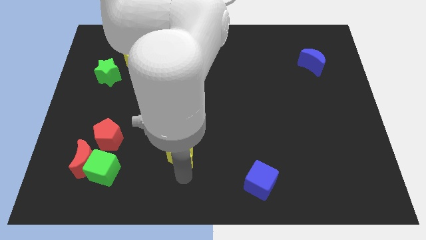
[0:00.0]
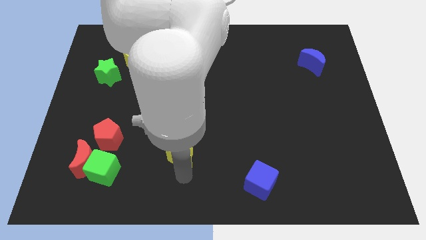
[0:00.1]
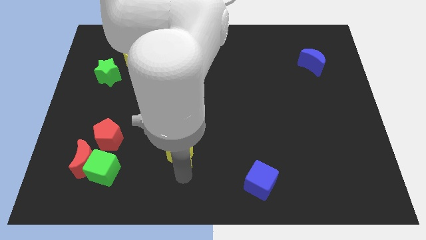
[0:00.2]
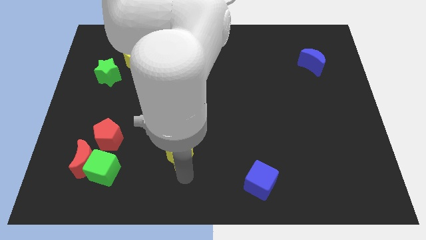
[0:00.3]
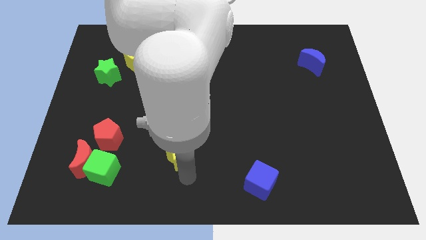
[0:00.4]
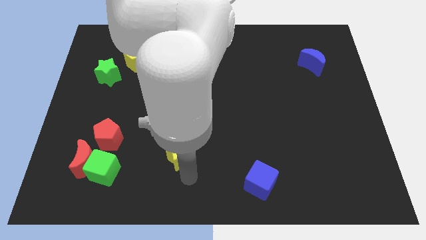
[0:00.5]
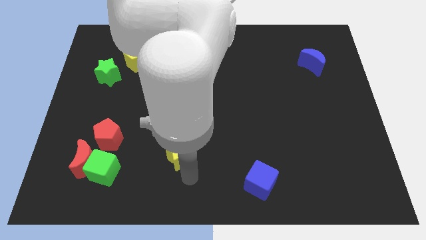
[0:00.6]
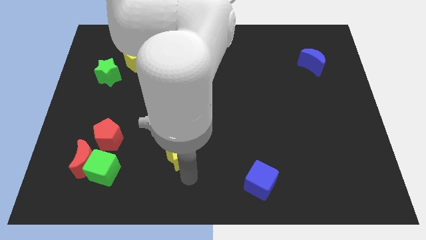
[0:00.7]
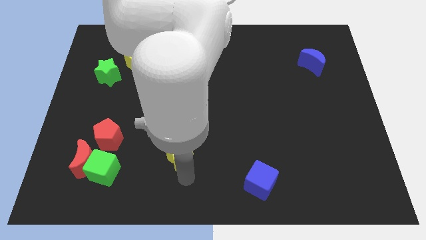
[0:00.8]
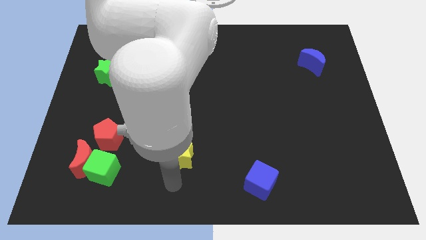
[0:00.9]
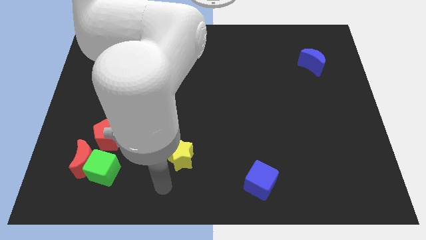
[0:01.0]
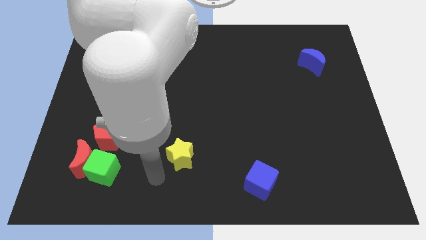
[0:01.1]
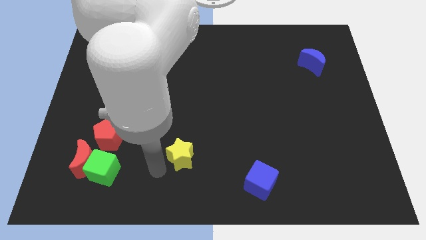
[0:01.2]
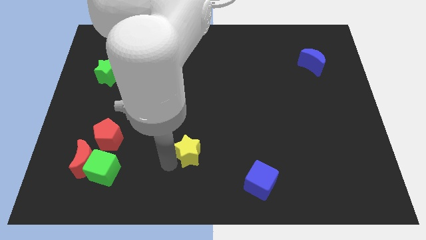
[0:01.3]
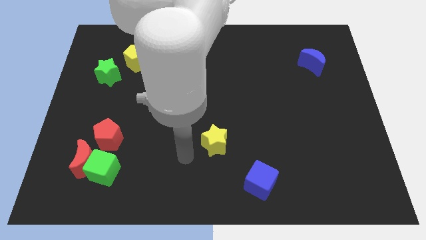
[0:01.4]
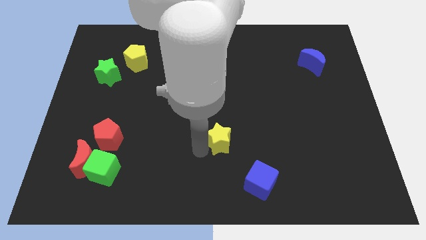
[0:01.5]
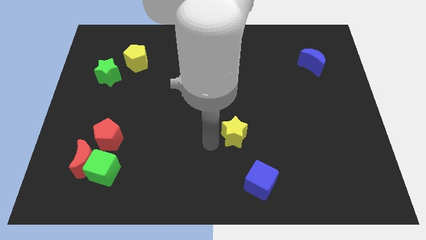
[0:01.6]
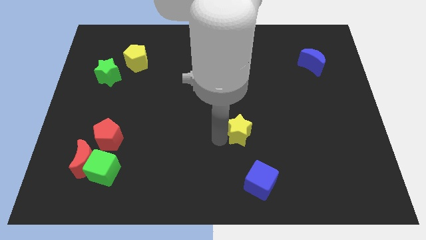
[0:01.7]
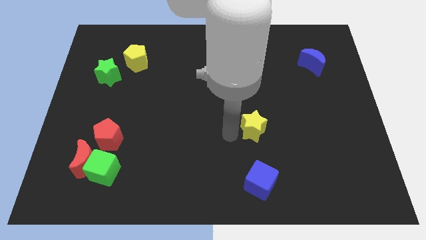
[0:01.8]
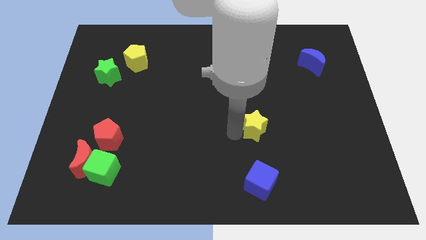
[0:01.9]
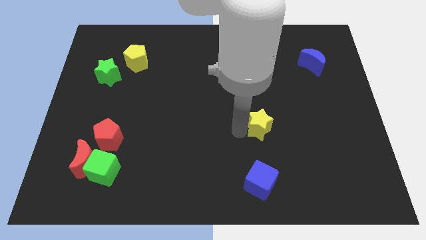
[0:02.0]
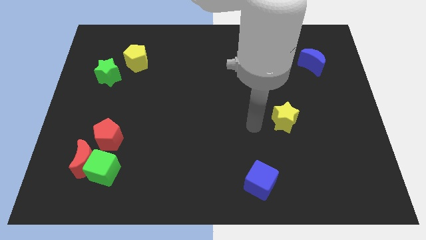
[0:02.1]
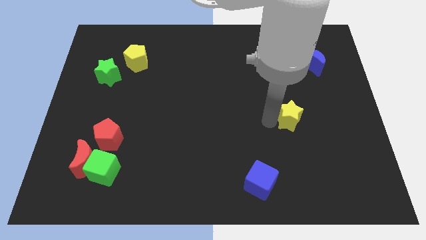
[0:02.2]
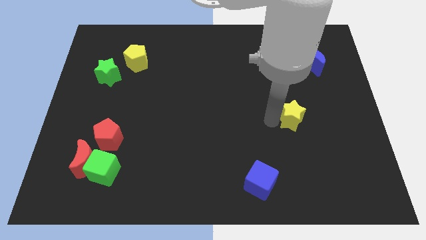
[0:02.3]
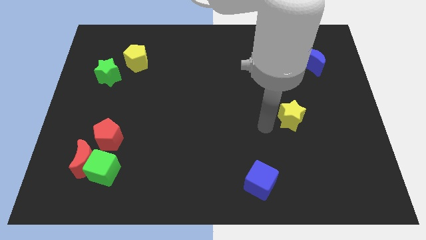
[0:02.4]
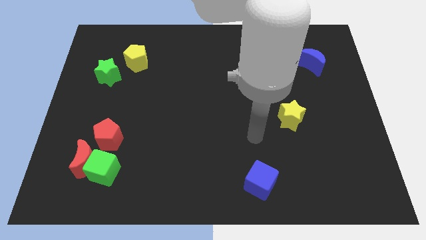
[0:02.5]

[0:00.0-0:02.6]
place the yellow star in between the blue crescent and blue cube

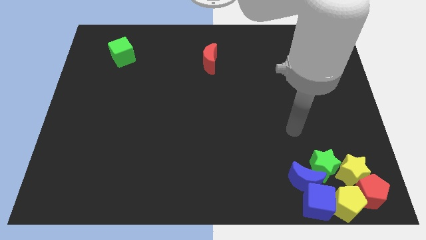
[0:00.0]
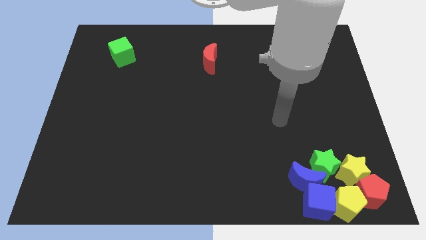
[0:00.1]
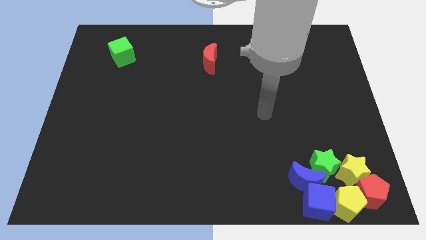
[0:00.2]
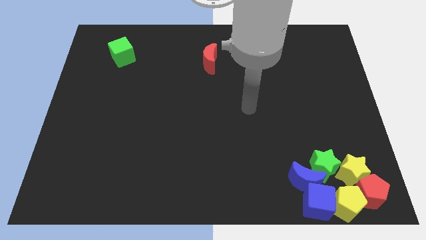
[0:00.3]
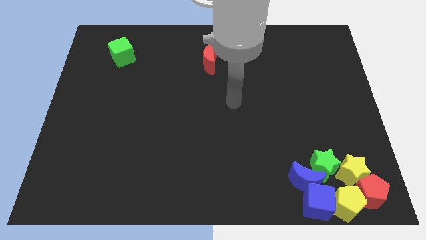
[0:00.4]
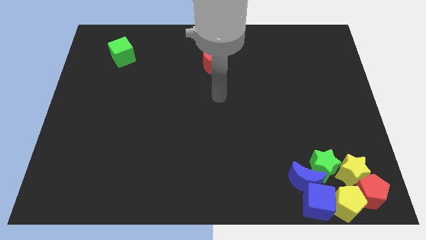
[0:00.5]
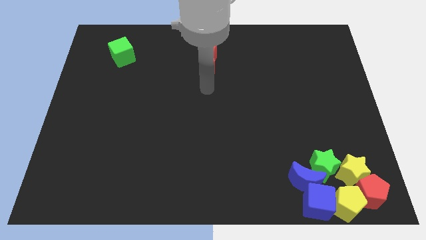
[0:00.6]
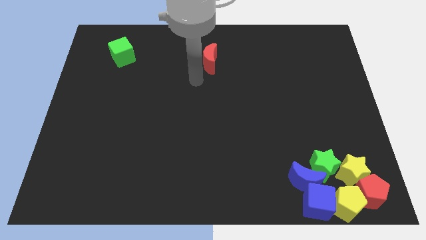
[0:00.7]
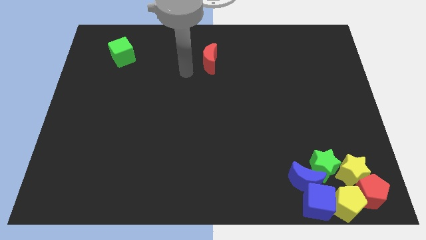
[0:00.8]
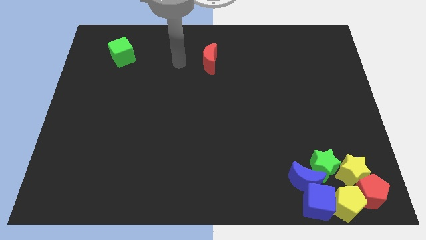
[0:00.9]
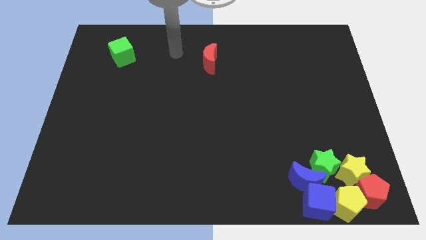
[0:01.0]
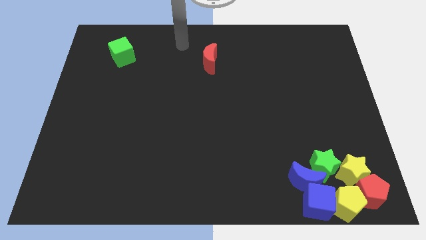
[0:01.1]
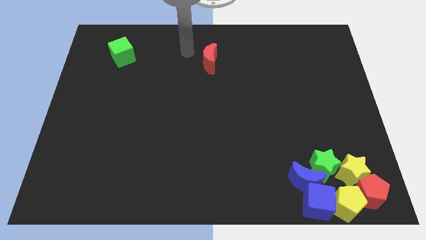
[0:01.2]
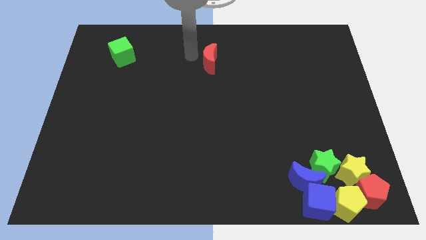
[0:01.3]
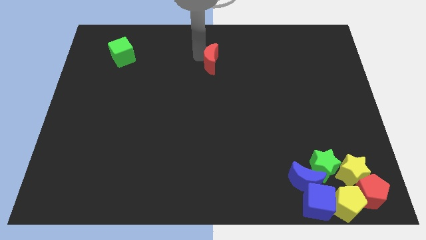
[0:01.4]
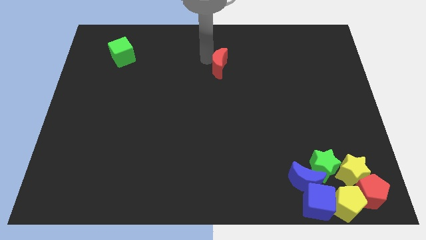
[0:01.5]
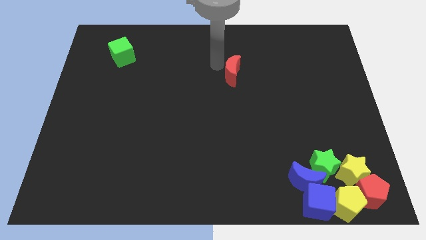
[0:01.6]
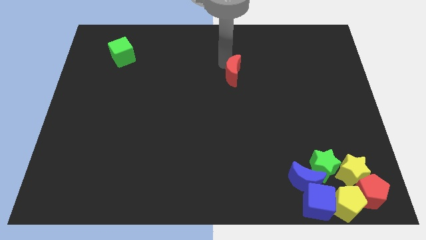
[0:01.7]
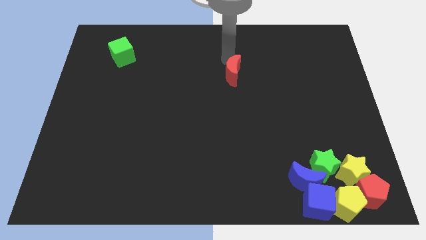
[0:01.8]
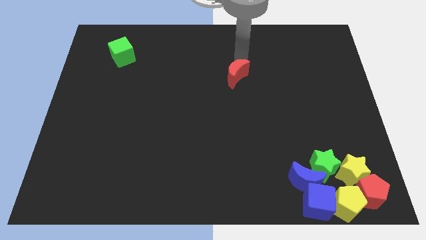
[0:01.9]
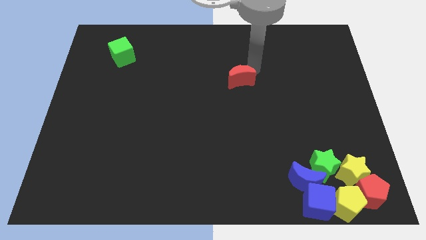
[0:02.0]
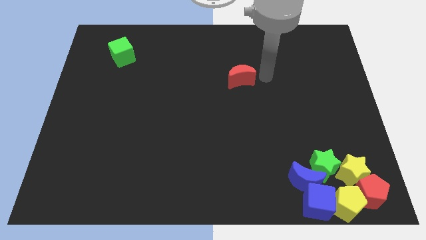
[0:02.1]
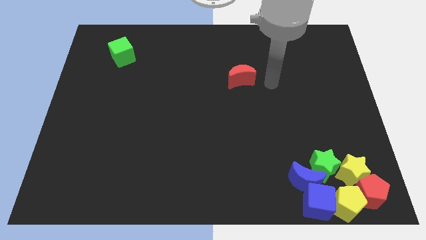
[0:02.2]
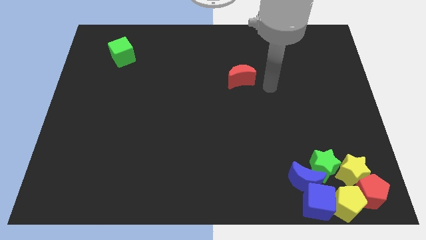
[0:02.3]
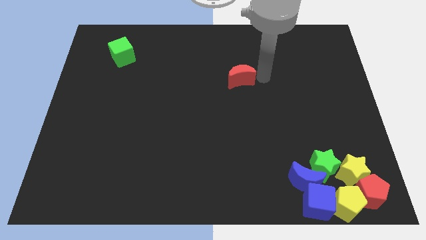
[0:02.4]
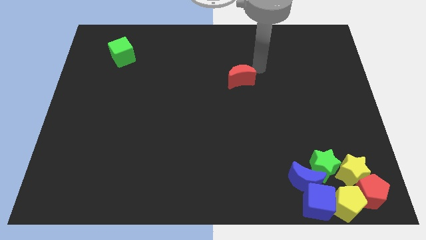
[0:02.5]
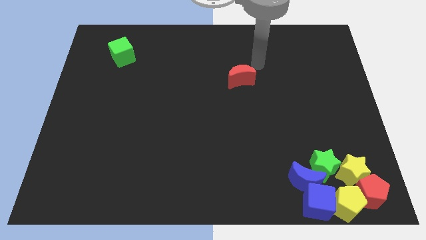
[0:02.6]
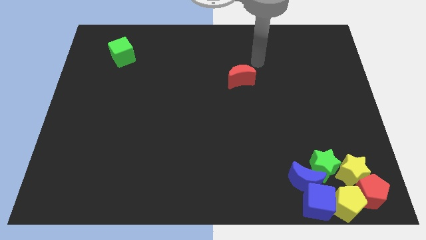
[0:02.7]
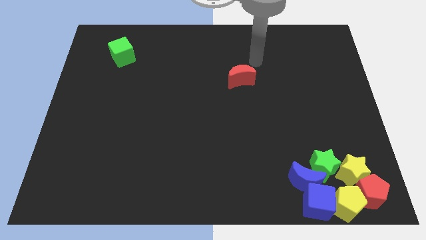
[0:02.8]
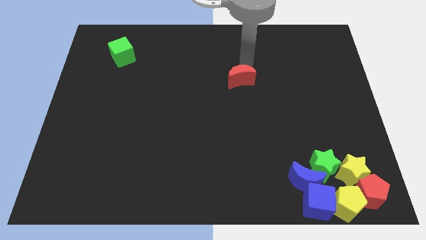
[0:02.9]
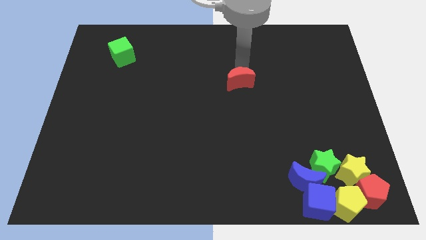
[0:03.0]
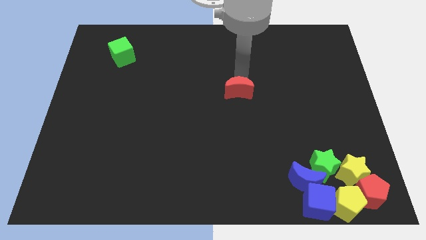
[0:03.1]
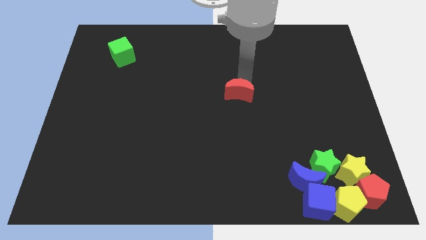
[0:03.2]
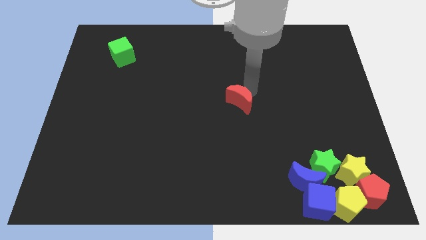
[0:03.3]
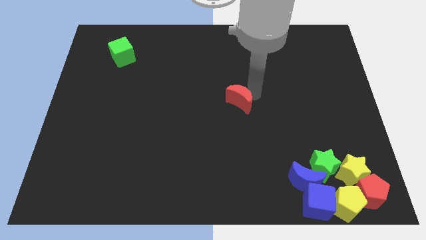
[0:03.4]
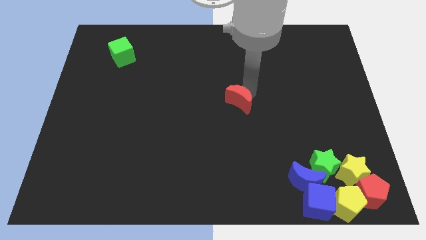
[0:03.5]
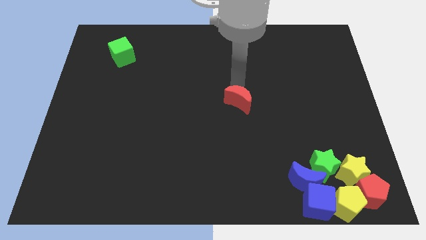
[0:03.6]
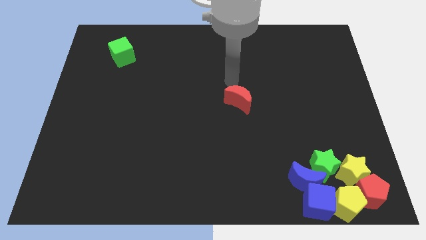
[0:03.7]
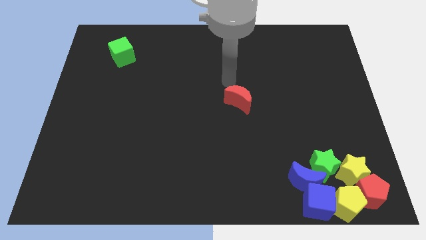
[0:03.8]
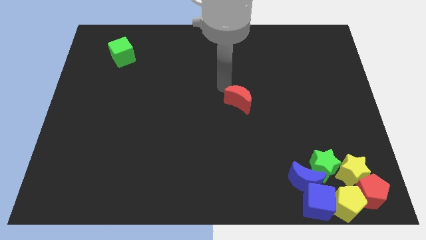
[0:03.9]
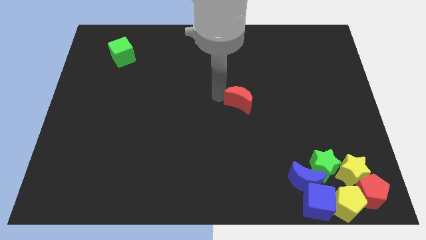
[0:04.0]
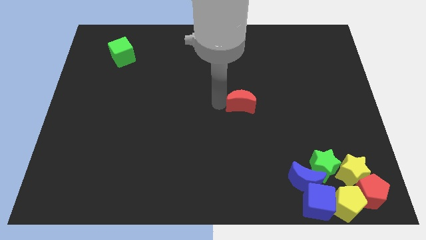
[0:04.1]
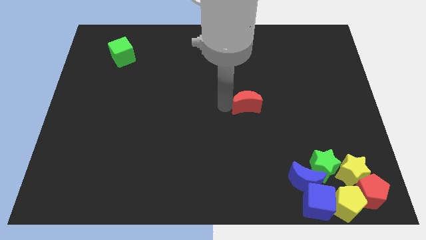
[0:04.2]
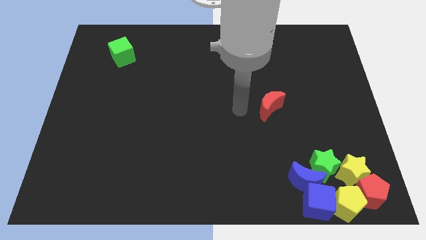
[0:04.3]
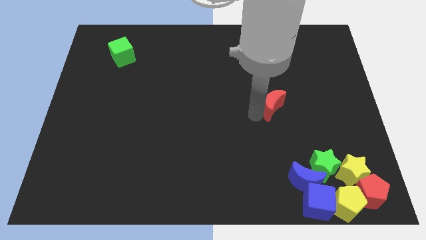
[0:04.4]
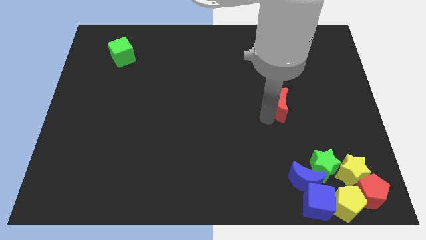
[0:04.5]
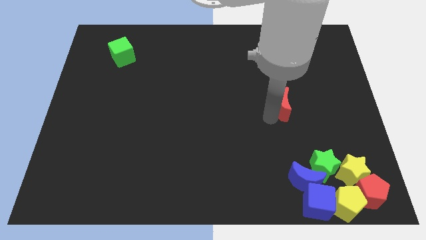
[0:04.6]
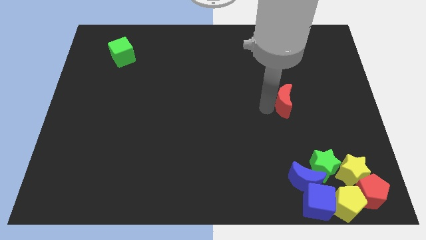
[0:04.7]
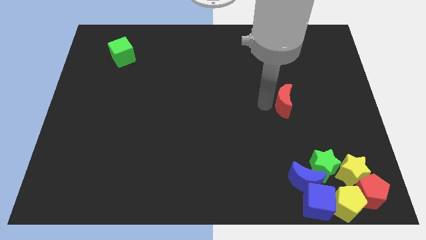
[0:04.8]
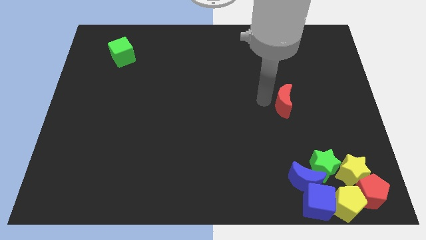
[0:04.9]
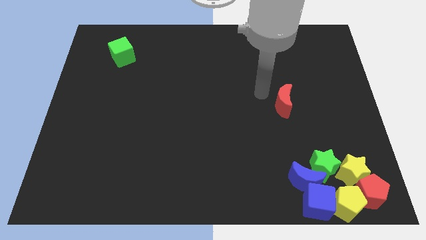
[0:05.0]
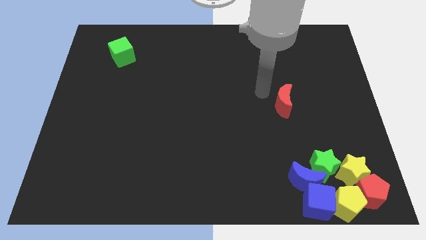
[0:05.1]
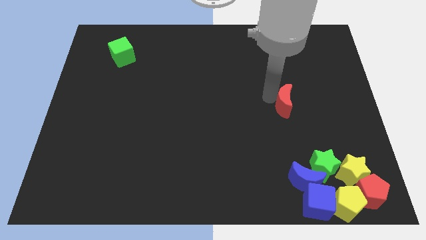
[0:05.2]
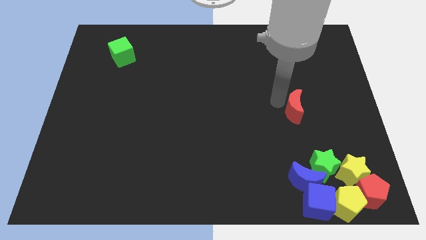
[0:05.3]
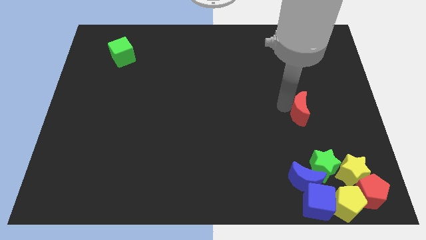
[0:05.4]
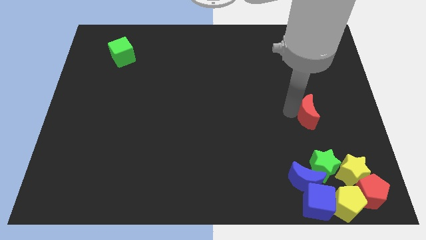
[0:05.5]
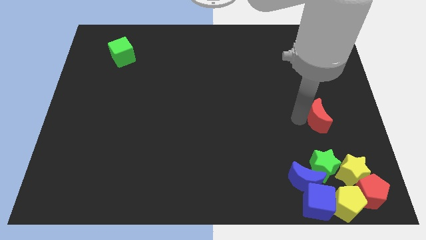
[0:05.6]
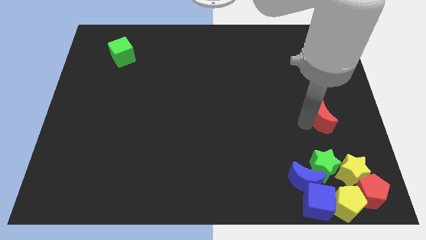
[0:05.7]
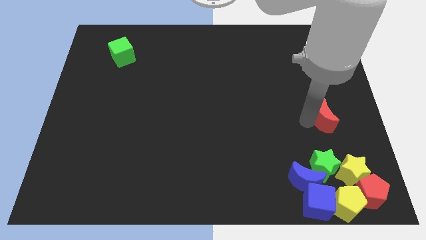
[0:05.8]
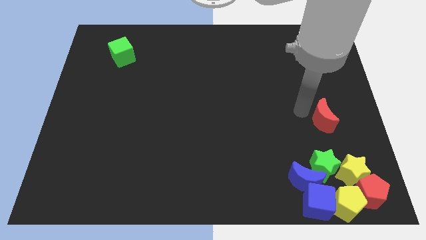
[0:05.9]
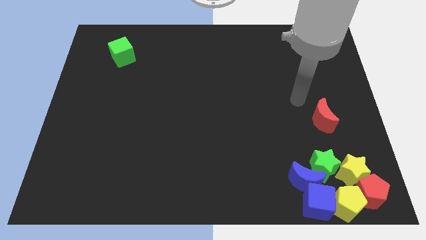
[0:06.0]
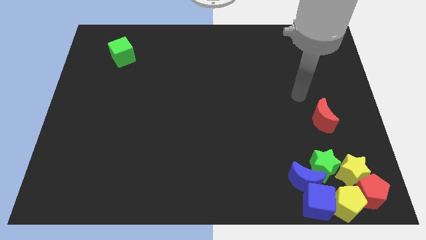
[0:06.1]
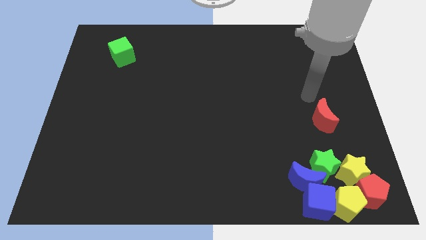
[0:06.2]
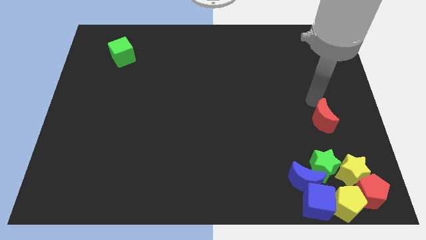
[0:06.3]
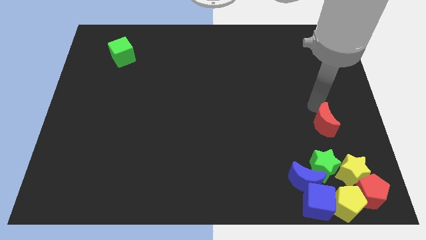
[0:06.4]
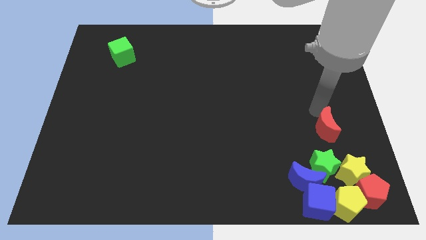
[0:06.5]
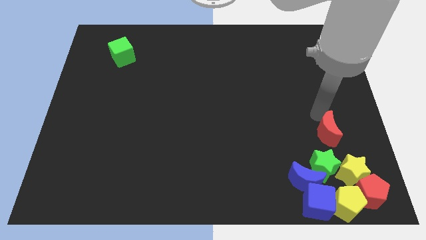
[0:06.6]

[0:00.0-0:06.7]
put the red moon above the green star
